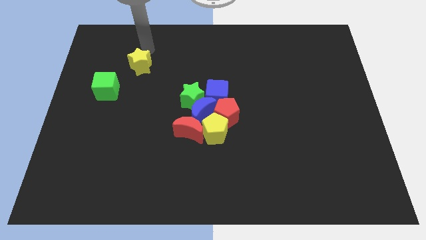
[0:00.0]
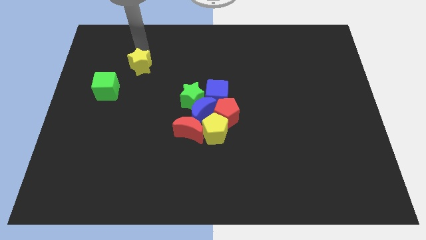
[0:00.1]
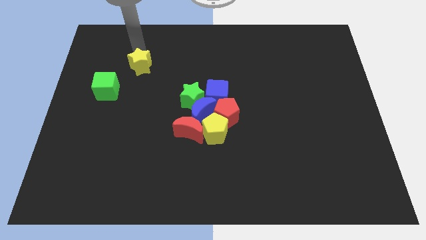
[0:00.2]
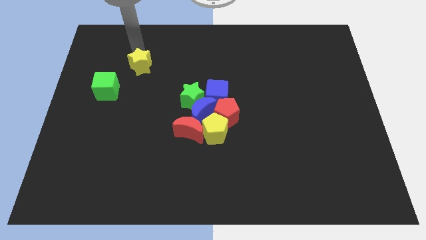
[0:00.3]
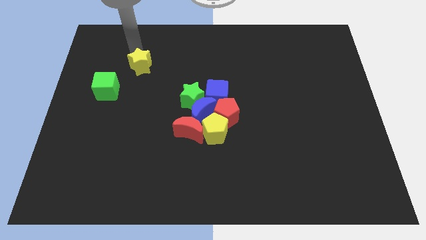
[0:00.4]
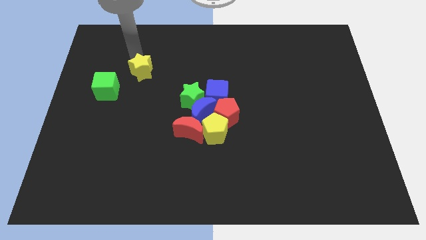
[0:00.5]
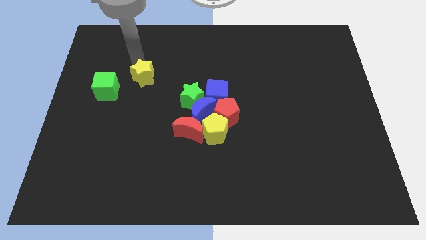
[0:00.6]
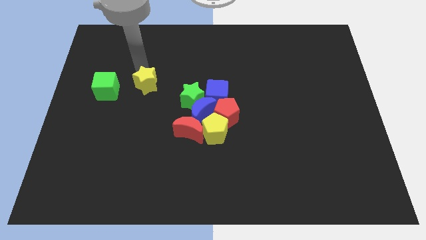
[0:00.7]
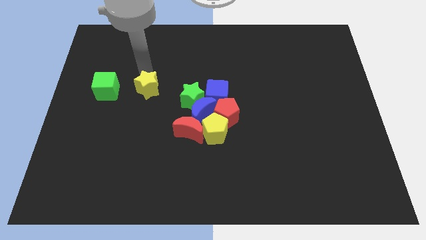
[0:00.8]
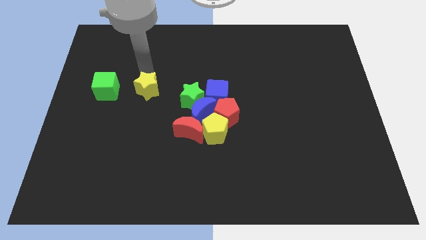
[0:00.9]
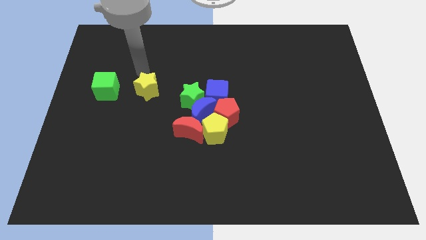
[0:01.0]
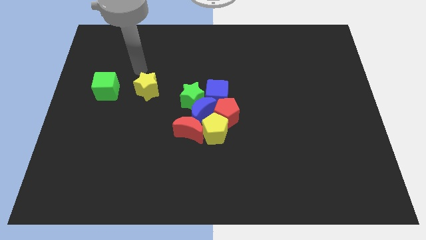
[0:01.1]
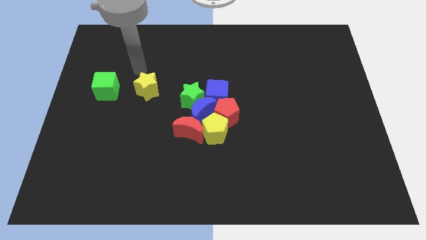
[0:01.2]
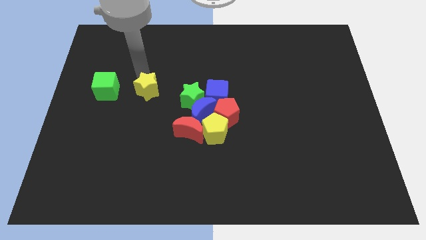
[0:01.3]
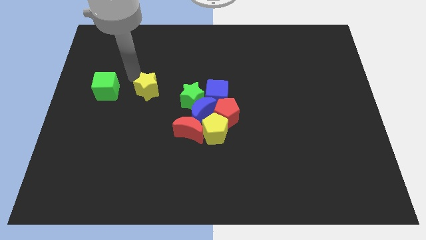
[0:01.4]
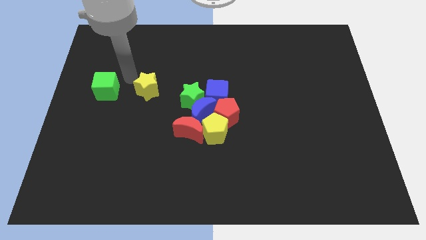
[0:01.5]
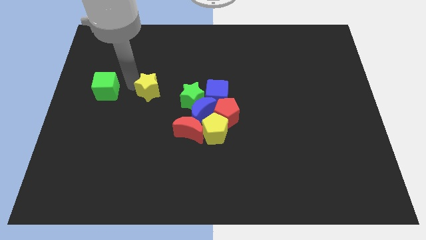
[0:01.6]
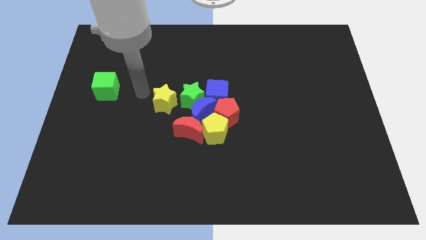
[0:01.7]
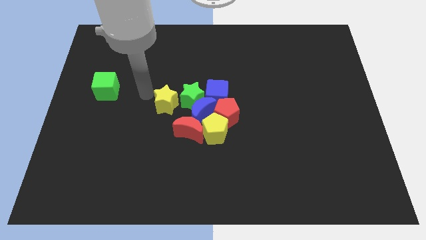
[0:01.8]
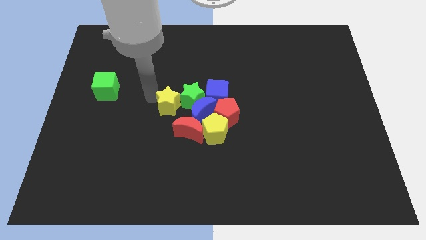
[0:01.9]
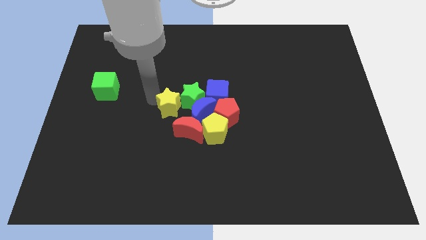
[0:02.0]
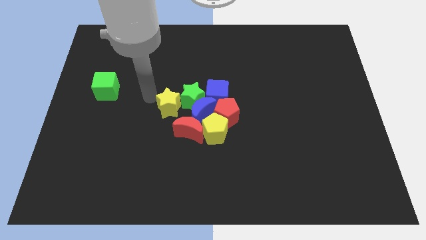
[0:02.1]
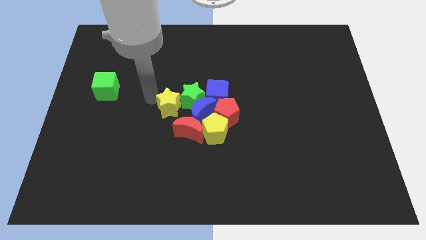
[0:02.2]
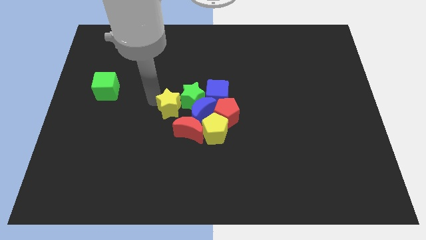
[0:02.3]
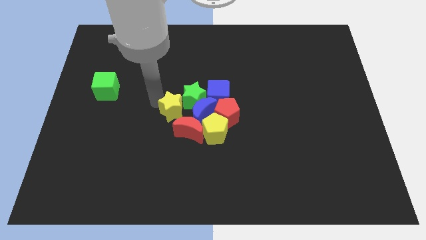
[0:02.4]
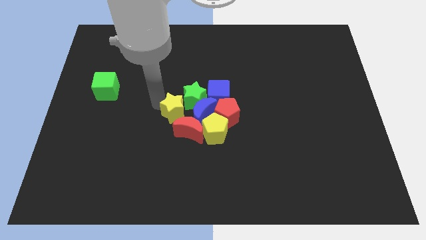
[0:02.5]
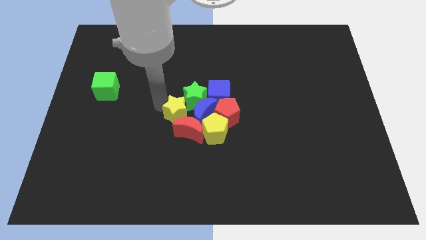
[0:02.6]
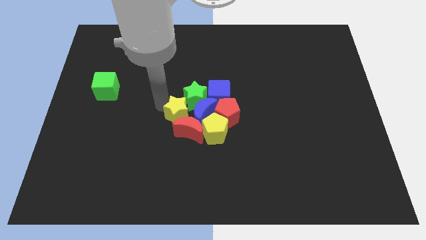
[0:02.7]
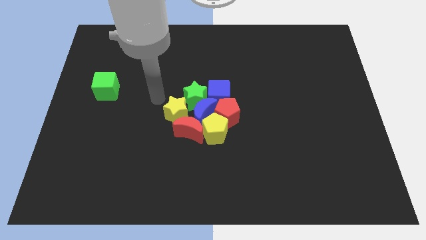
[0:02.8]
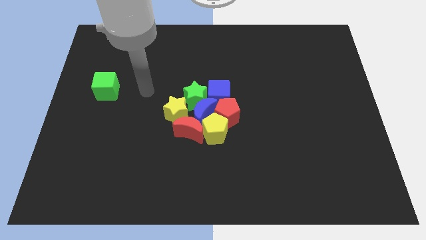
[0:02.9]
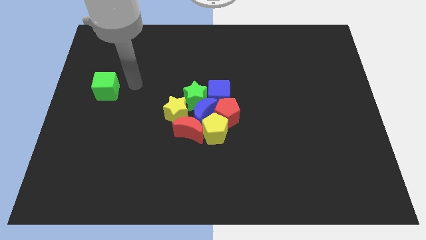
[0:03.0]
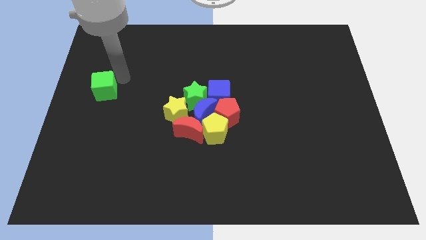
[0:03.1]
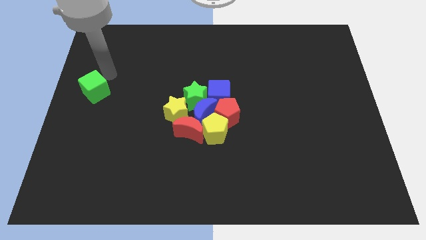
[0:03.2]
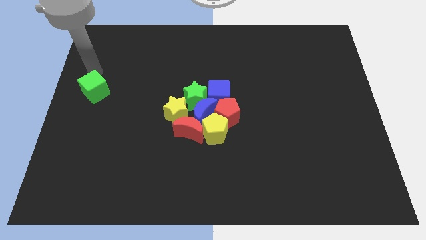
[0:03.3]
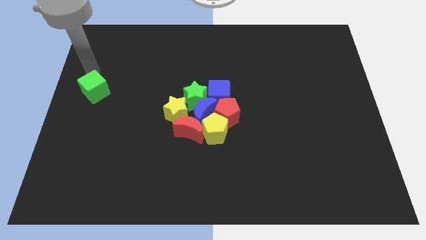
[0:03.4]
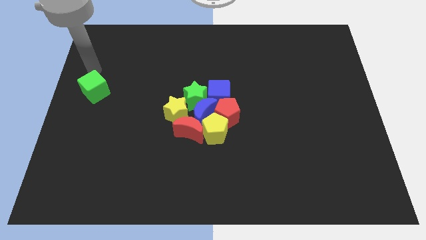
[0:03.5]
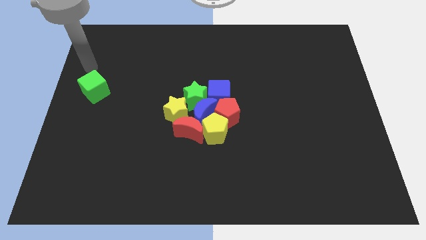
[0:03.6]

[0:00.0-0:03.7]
move yellow star left below the green star

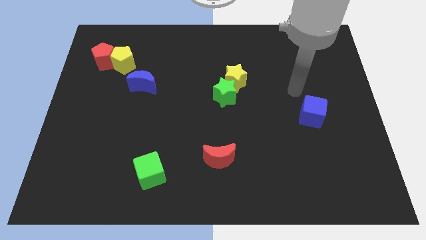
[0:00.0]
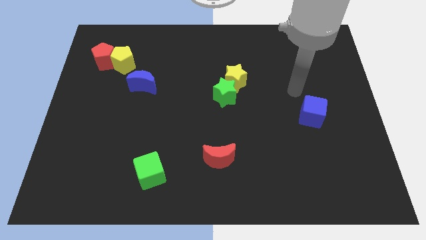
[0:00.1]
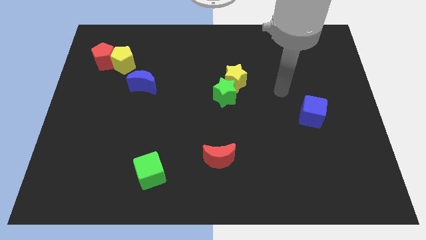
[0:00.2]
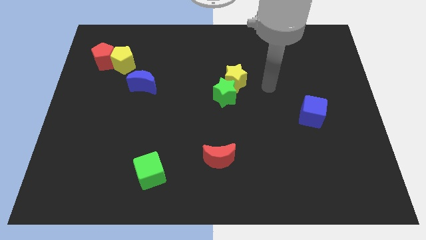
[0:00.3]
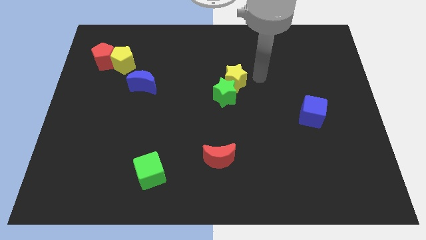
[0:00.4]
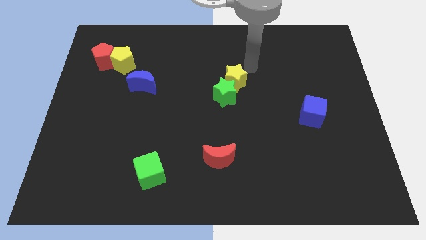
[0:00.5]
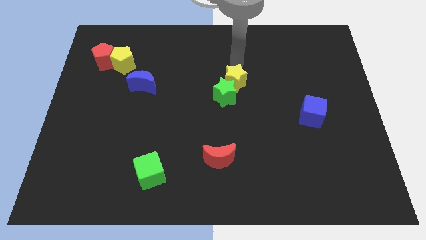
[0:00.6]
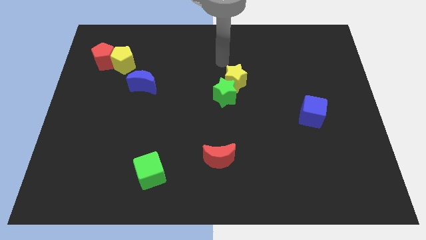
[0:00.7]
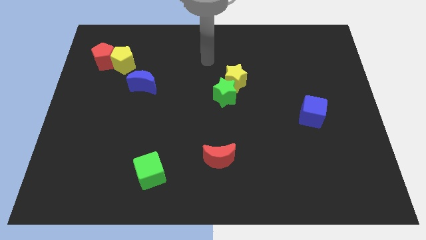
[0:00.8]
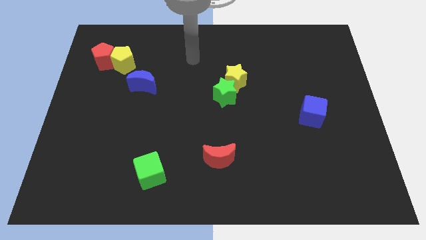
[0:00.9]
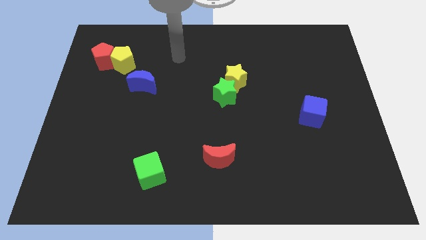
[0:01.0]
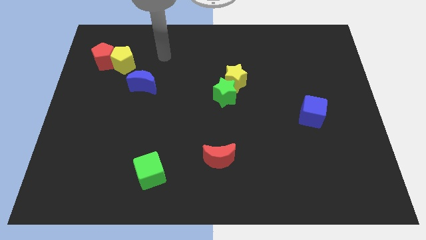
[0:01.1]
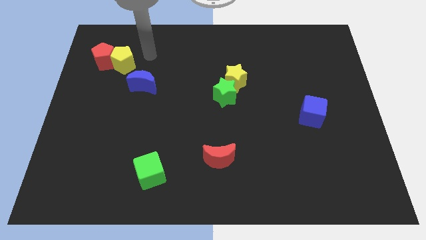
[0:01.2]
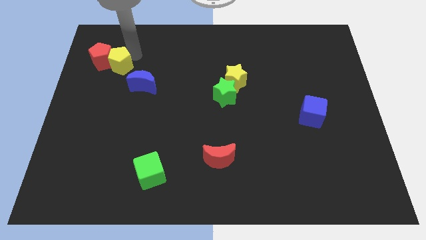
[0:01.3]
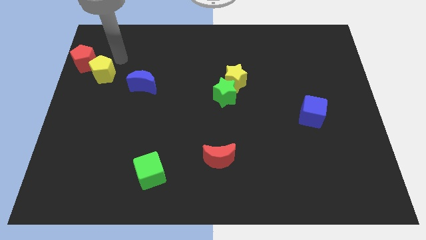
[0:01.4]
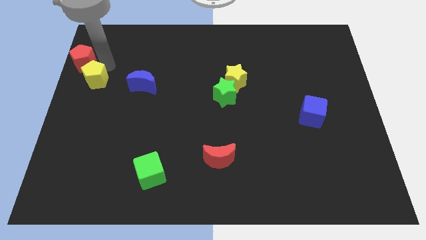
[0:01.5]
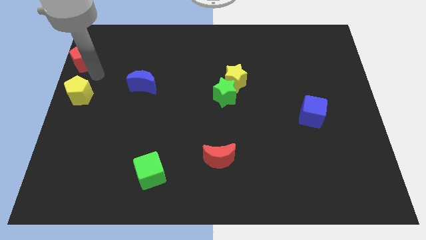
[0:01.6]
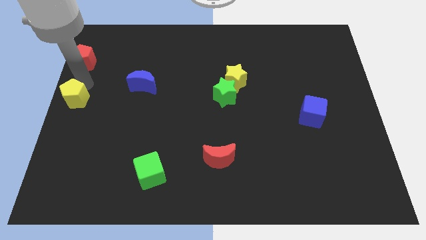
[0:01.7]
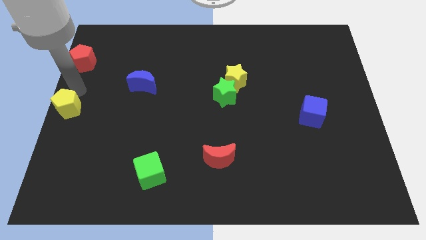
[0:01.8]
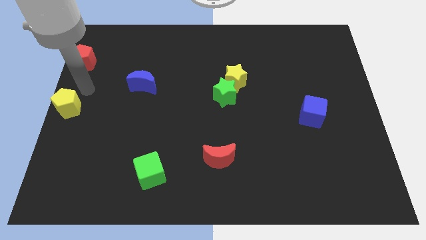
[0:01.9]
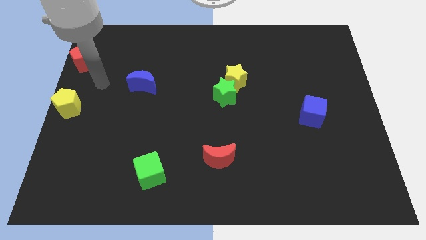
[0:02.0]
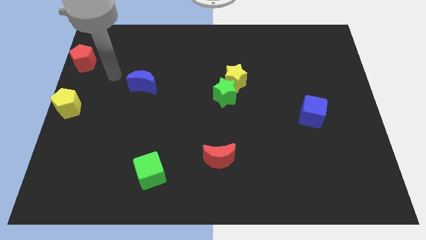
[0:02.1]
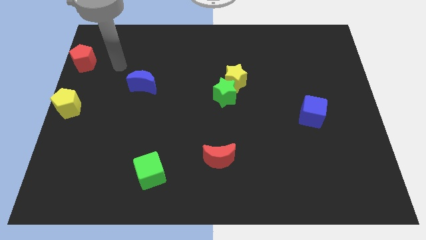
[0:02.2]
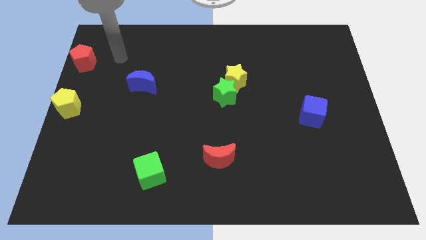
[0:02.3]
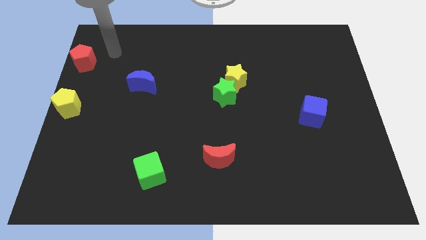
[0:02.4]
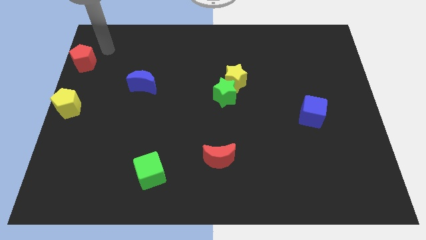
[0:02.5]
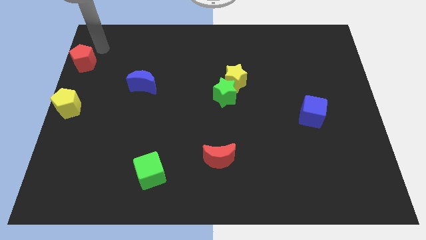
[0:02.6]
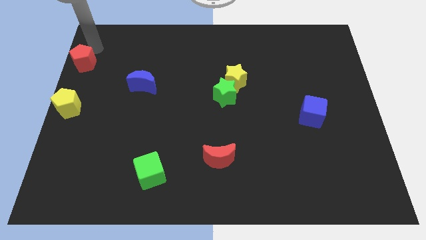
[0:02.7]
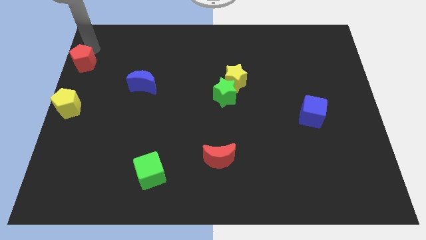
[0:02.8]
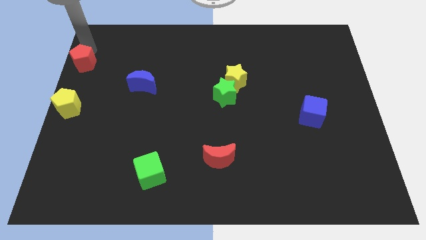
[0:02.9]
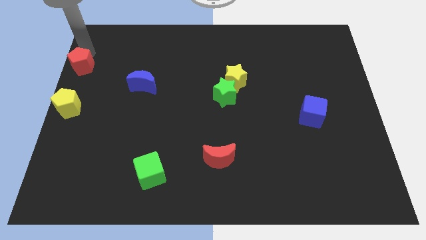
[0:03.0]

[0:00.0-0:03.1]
push the yellow pentagon to the center left of the board

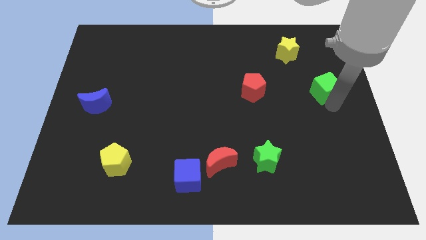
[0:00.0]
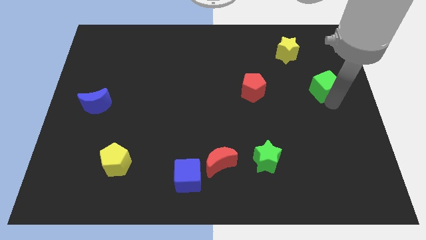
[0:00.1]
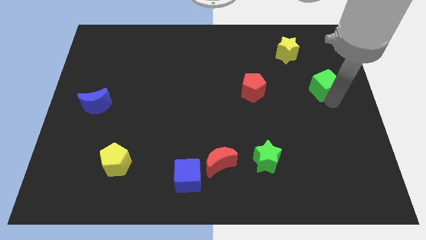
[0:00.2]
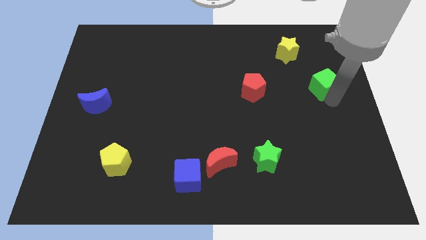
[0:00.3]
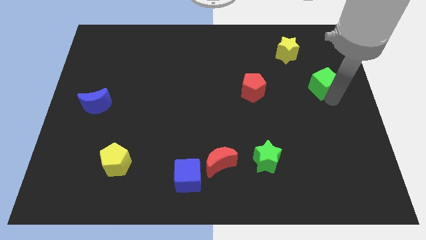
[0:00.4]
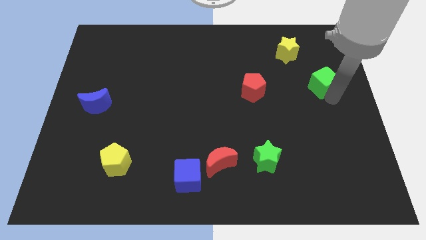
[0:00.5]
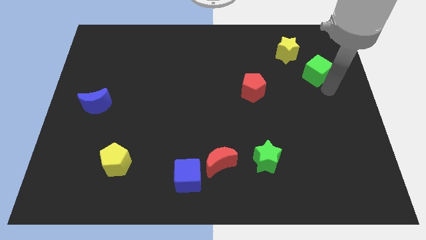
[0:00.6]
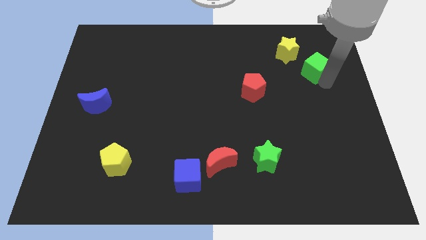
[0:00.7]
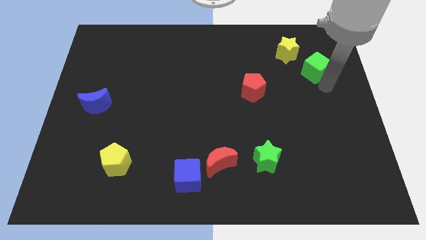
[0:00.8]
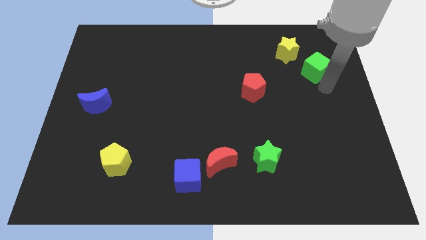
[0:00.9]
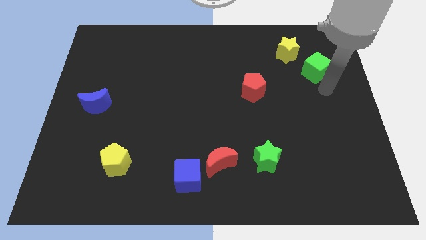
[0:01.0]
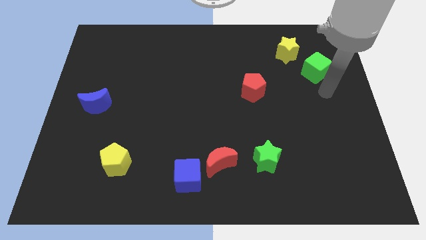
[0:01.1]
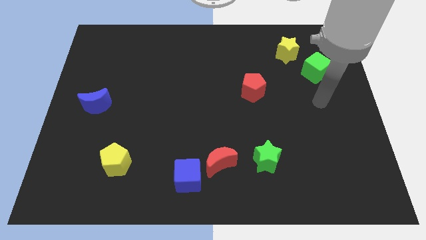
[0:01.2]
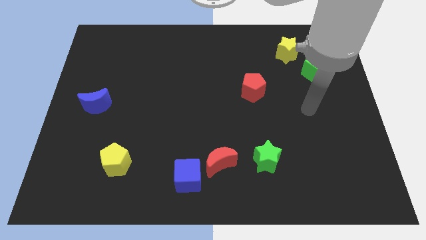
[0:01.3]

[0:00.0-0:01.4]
slide the green cube slightly to the top side of the board

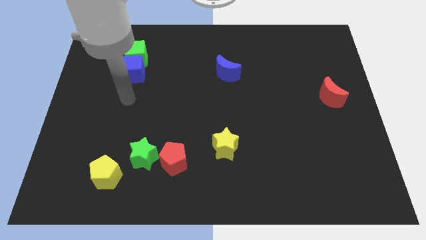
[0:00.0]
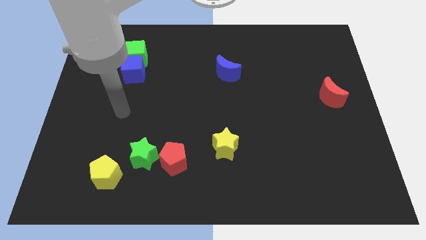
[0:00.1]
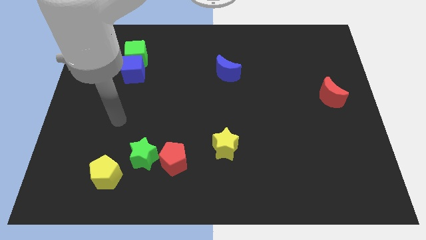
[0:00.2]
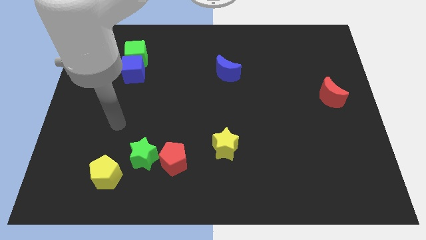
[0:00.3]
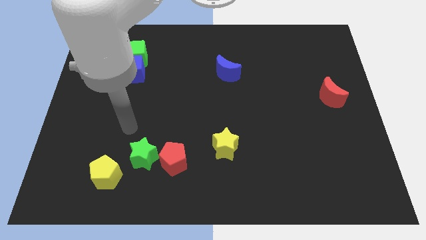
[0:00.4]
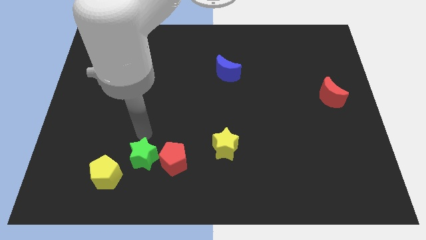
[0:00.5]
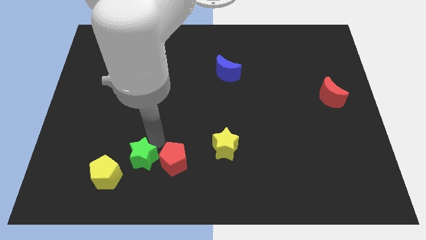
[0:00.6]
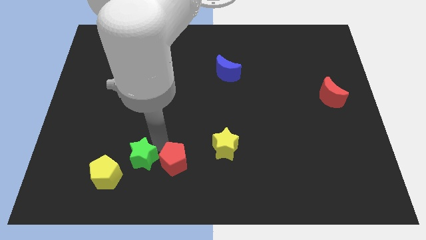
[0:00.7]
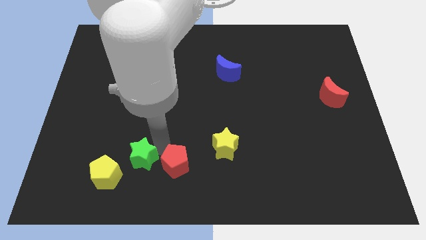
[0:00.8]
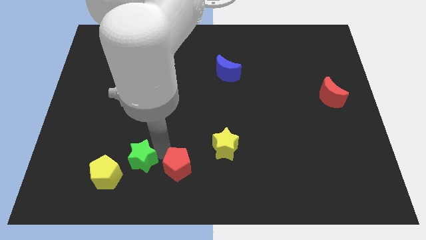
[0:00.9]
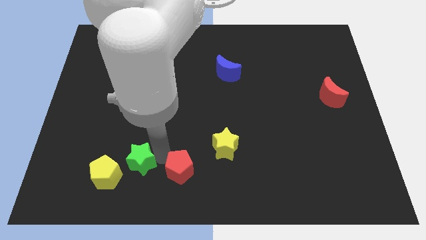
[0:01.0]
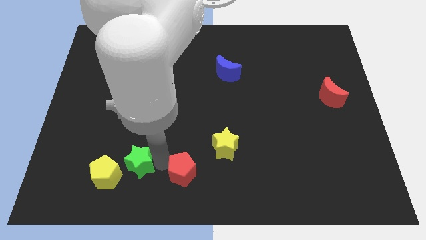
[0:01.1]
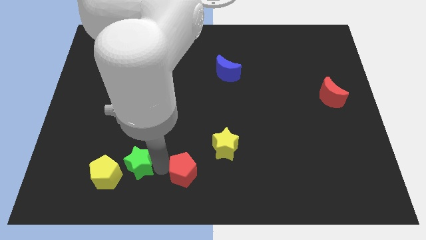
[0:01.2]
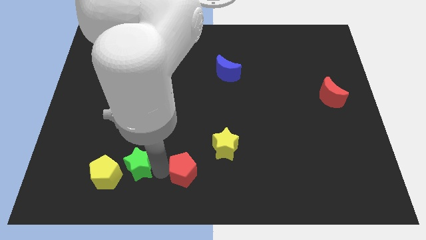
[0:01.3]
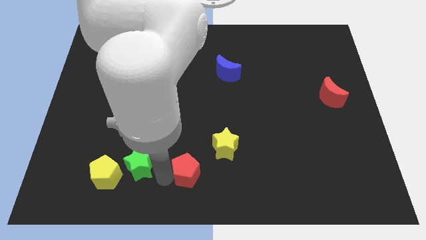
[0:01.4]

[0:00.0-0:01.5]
separate the green star and the red pentagon
